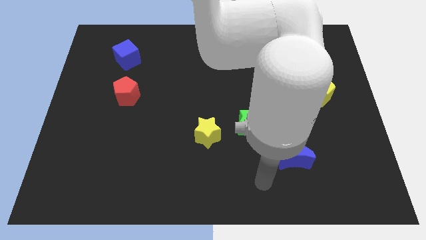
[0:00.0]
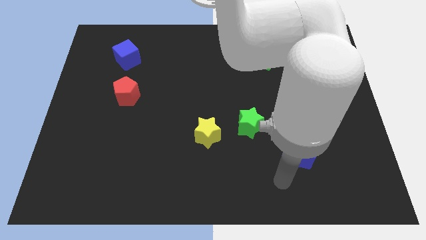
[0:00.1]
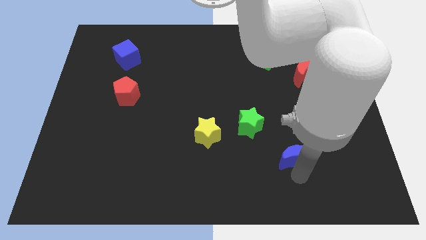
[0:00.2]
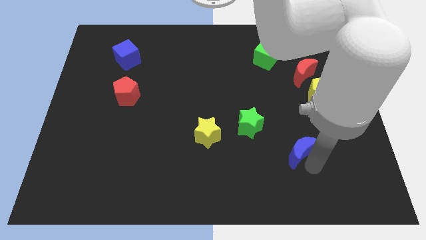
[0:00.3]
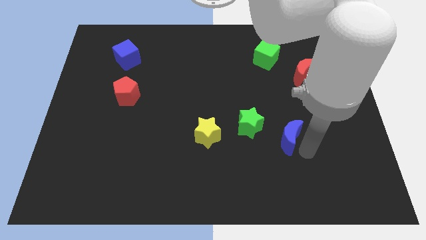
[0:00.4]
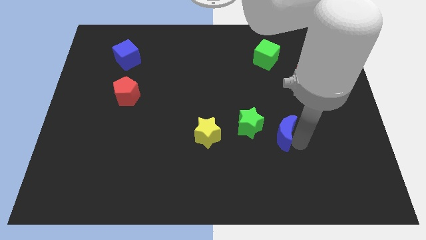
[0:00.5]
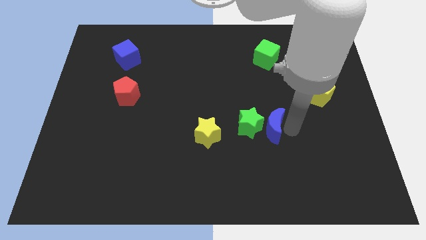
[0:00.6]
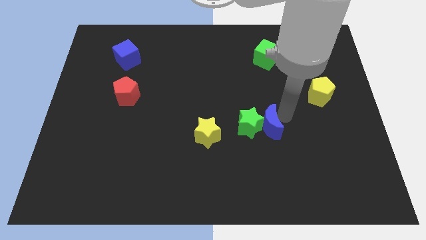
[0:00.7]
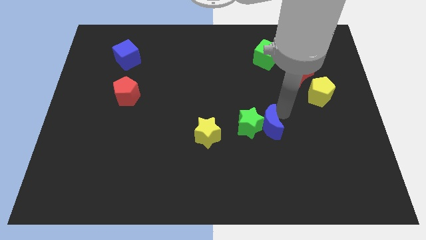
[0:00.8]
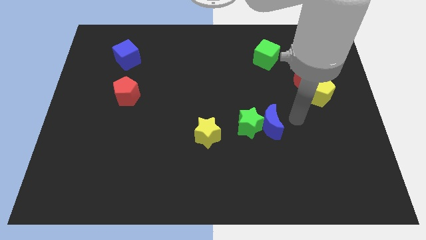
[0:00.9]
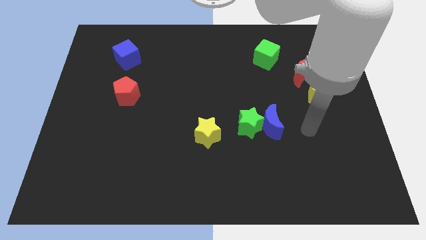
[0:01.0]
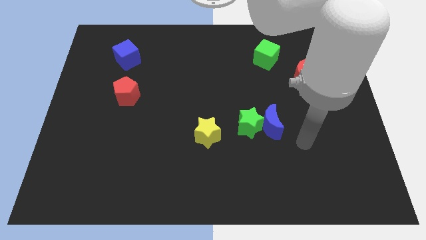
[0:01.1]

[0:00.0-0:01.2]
move the blue crescent close to the right of the green star

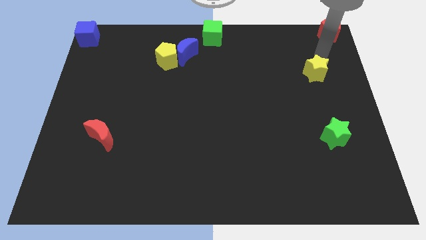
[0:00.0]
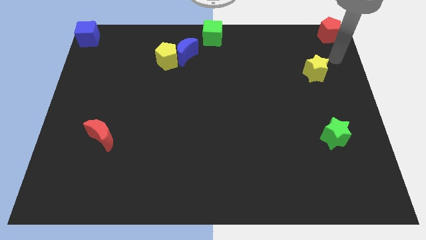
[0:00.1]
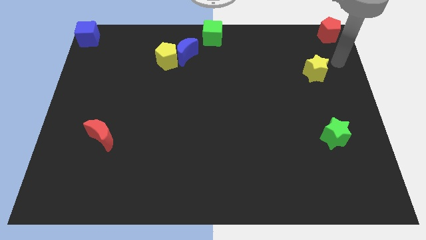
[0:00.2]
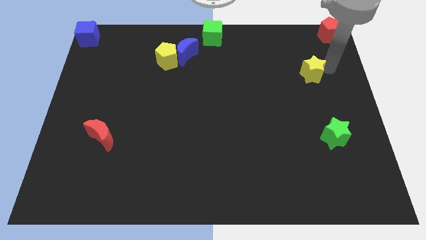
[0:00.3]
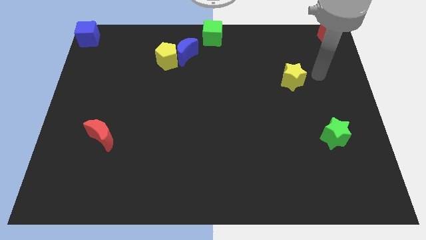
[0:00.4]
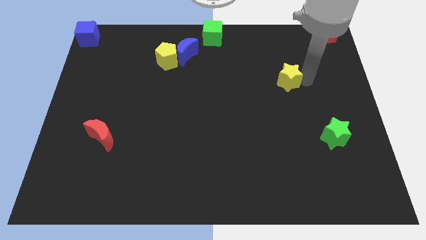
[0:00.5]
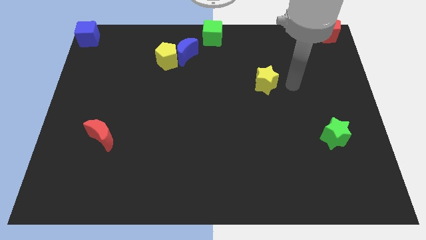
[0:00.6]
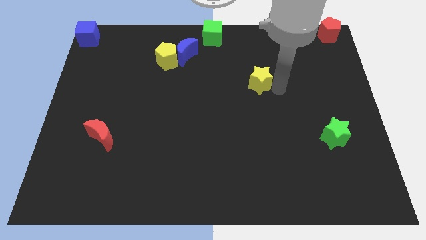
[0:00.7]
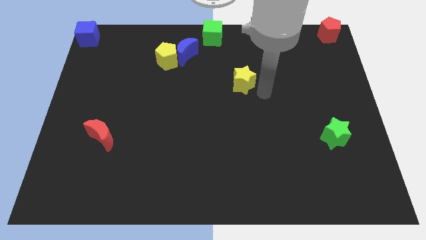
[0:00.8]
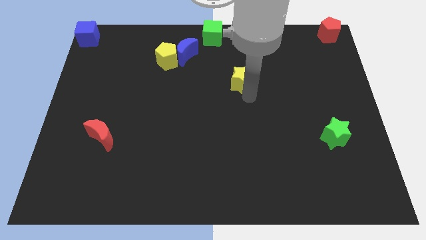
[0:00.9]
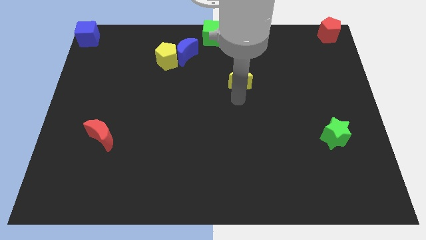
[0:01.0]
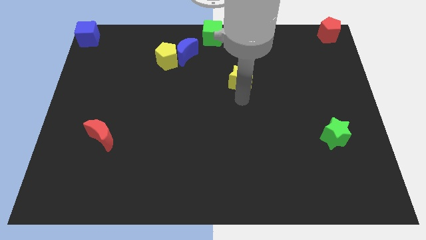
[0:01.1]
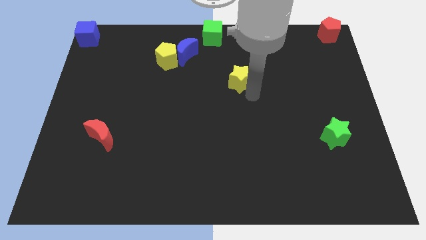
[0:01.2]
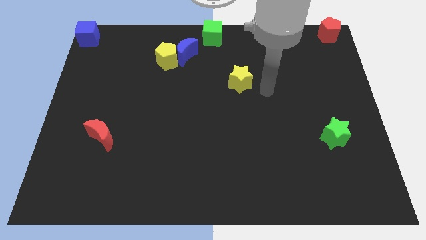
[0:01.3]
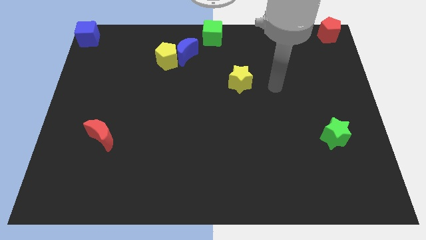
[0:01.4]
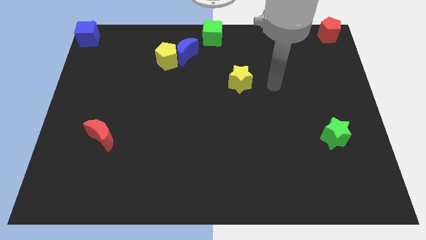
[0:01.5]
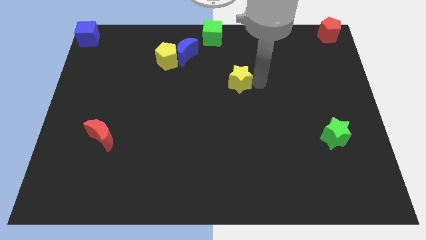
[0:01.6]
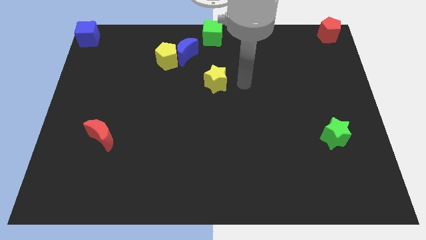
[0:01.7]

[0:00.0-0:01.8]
push the yellow star towards the left side of the board

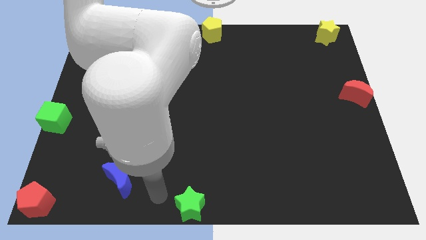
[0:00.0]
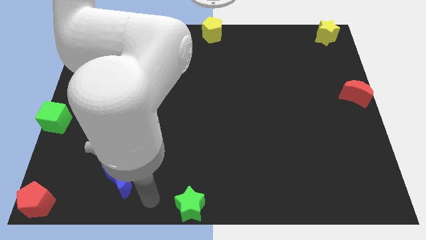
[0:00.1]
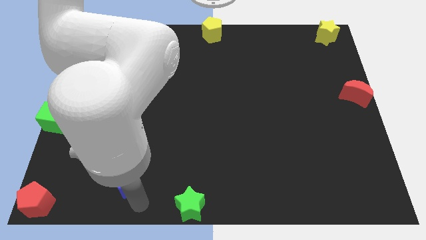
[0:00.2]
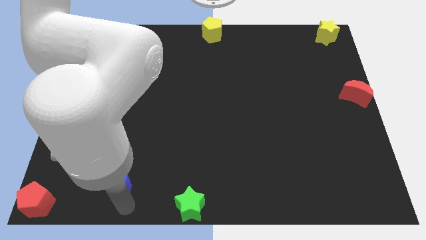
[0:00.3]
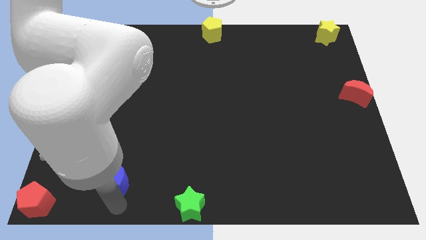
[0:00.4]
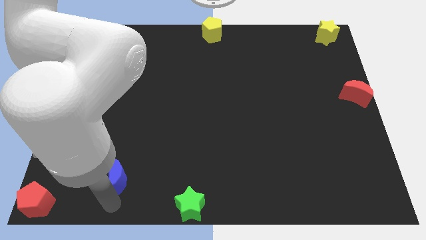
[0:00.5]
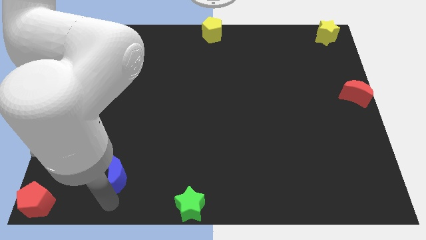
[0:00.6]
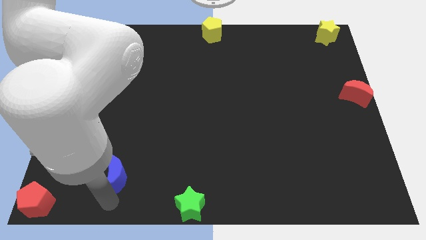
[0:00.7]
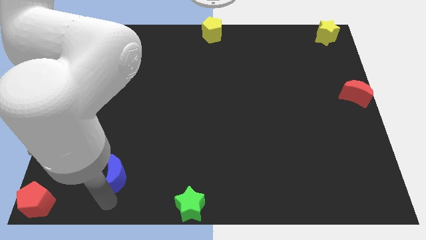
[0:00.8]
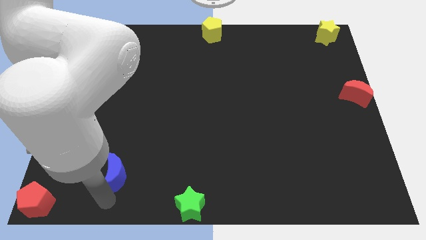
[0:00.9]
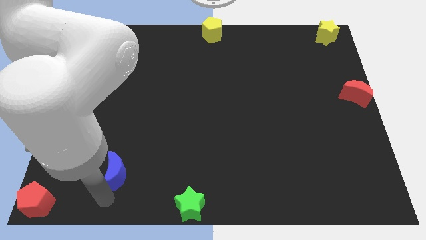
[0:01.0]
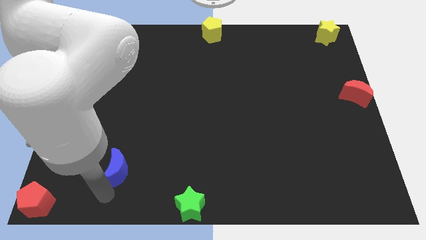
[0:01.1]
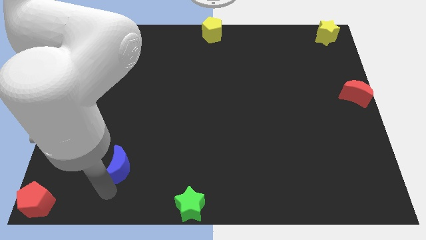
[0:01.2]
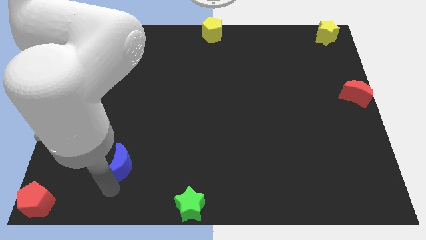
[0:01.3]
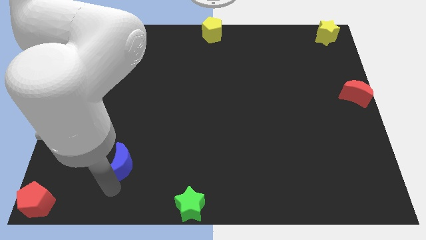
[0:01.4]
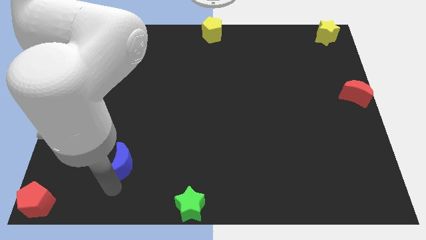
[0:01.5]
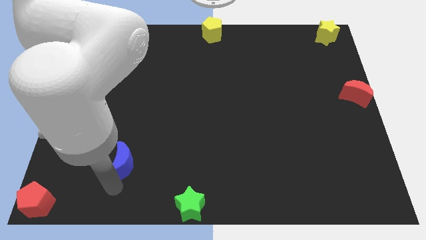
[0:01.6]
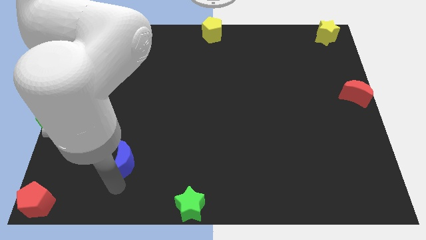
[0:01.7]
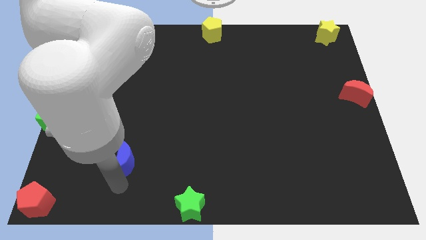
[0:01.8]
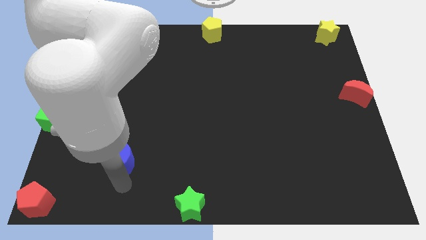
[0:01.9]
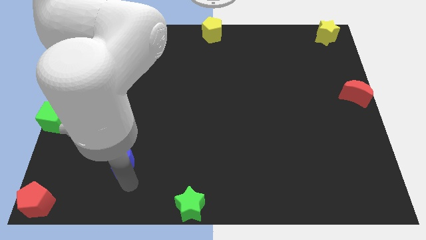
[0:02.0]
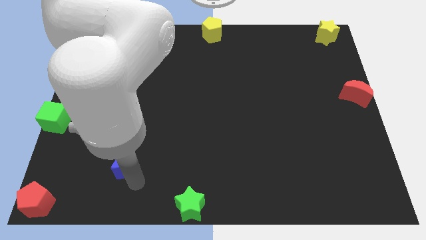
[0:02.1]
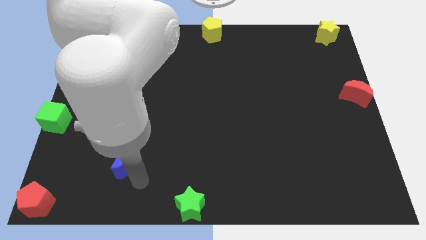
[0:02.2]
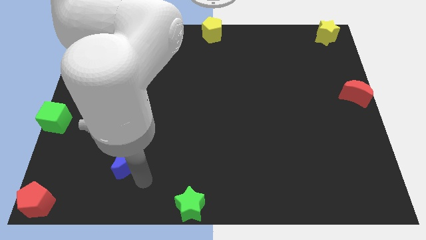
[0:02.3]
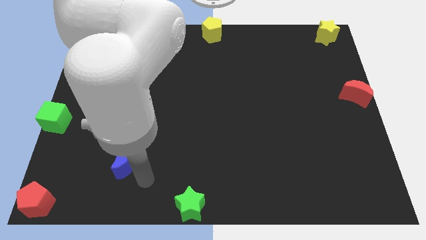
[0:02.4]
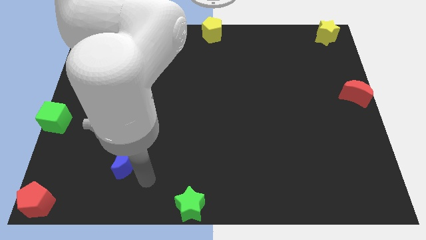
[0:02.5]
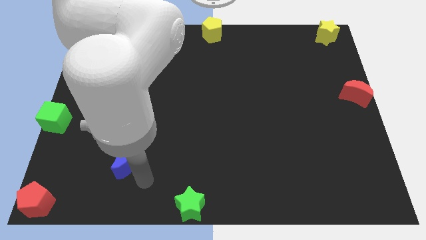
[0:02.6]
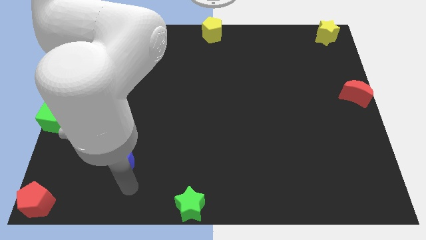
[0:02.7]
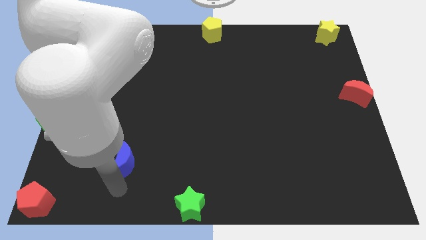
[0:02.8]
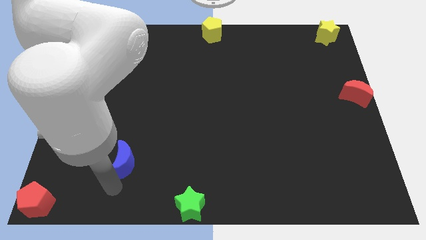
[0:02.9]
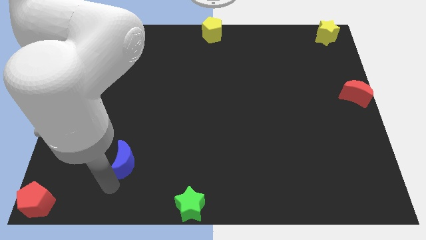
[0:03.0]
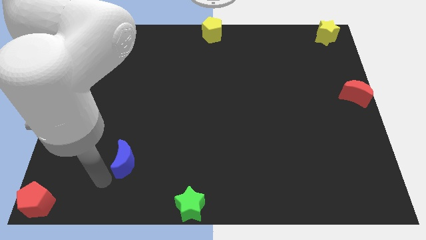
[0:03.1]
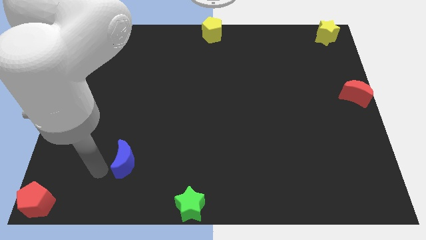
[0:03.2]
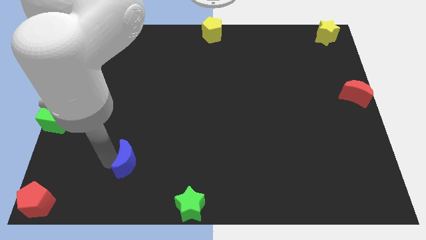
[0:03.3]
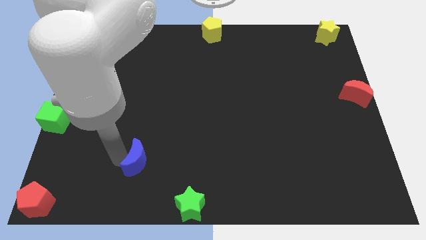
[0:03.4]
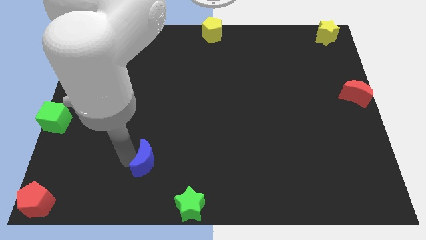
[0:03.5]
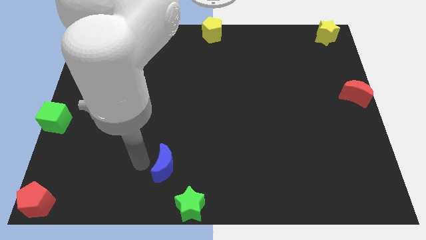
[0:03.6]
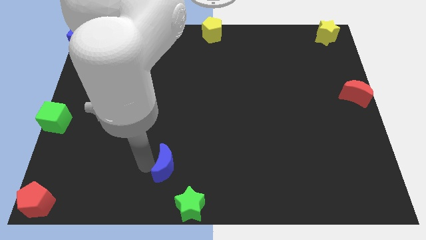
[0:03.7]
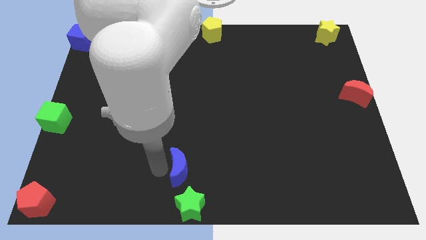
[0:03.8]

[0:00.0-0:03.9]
move the blue crescent towards the top of green star

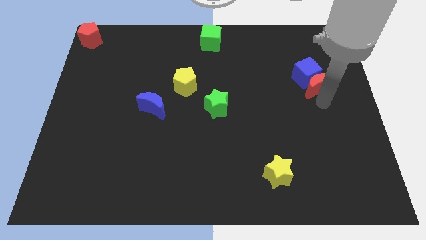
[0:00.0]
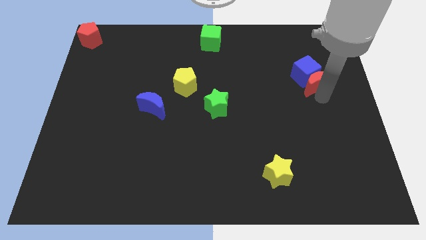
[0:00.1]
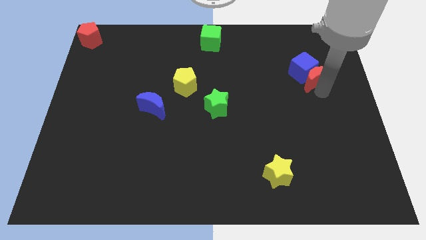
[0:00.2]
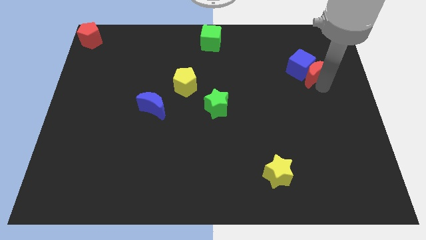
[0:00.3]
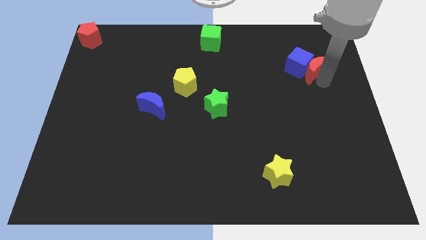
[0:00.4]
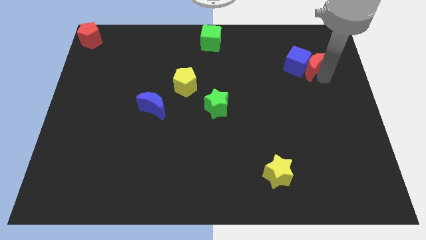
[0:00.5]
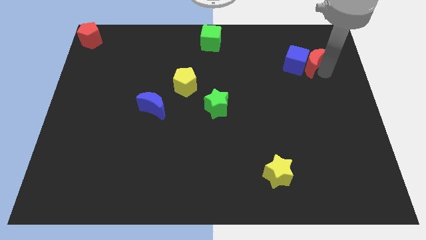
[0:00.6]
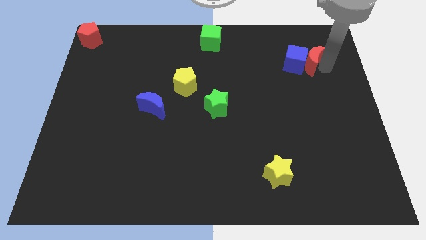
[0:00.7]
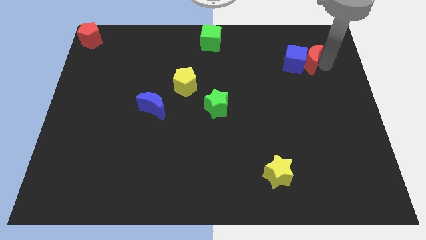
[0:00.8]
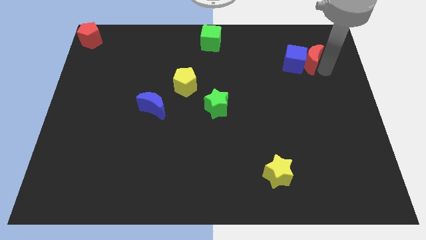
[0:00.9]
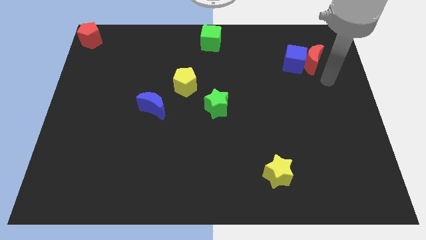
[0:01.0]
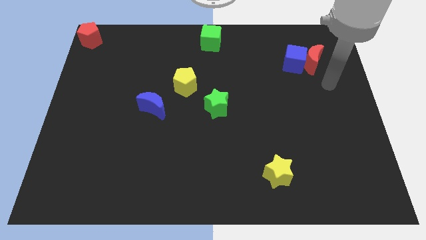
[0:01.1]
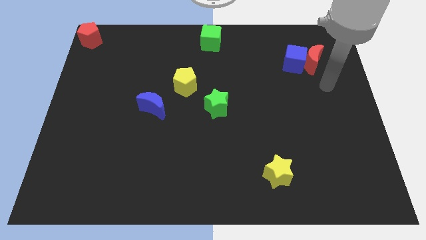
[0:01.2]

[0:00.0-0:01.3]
push red crescent along with the blue cube slightly upwards

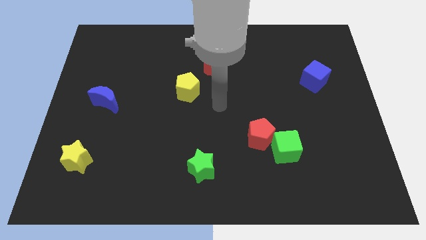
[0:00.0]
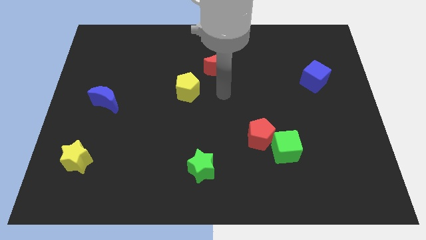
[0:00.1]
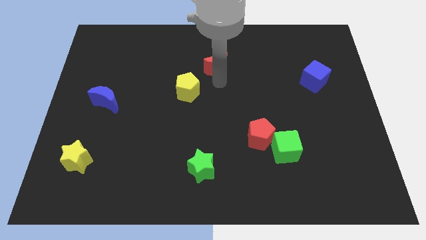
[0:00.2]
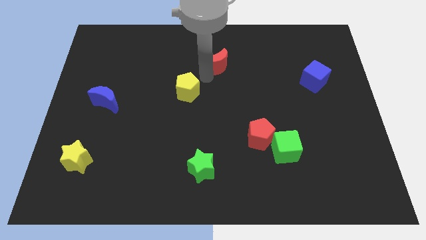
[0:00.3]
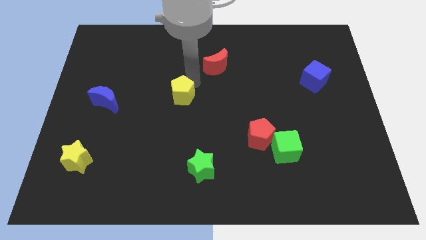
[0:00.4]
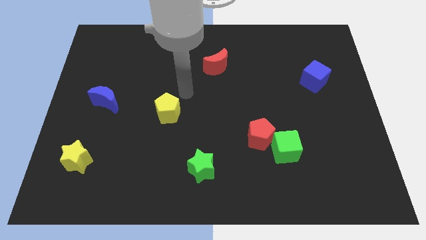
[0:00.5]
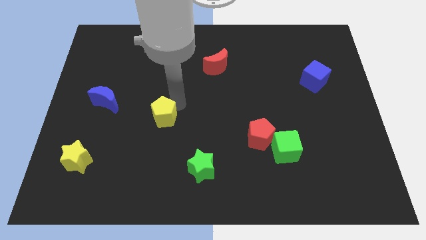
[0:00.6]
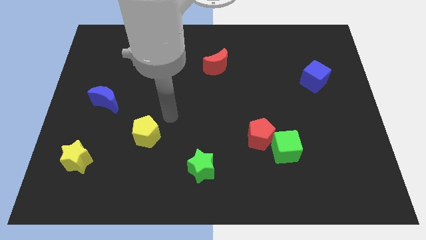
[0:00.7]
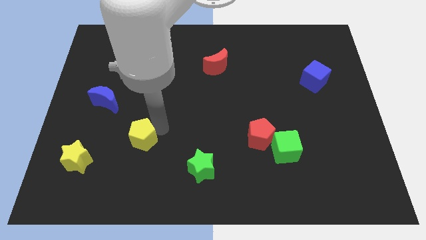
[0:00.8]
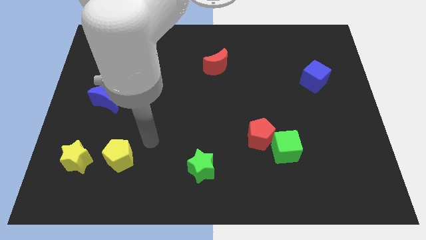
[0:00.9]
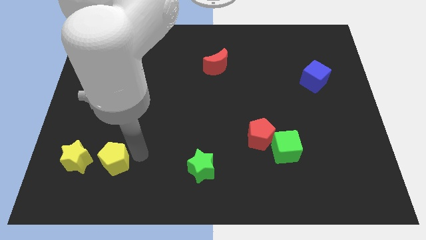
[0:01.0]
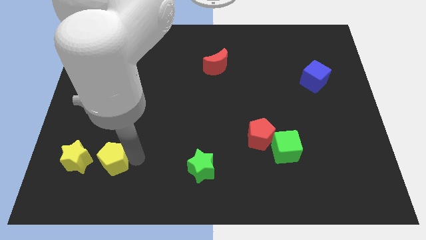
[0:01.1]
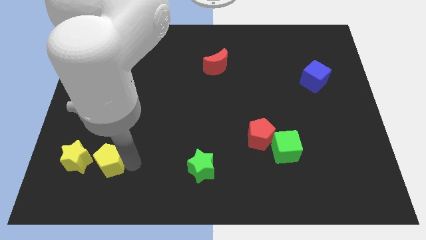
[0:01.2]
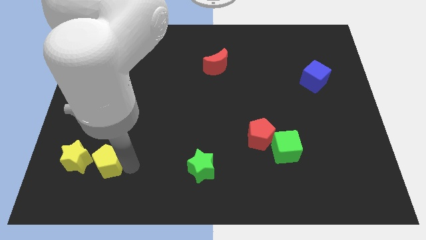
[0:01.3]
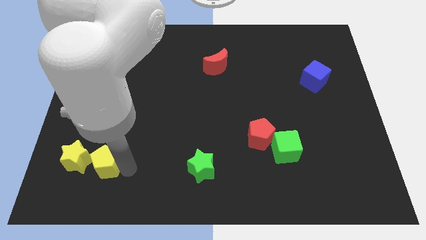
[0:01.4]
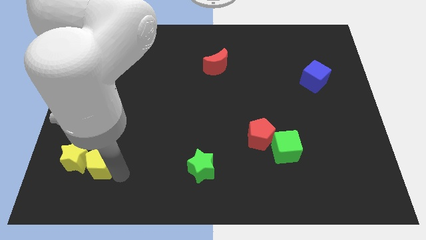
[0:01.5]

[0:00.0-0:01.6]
put the yellow pentagon to the right side of the yellow star
